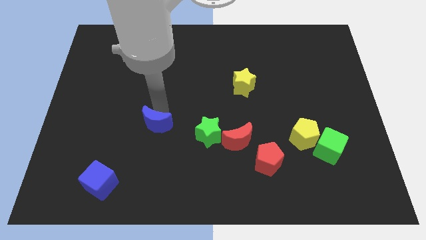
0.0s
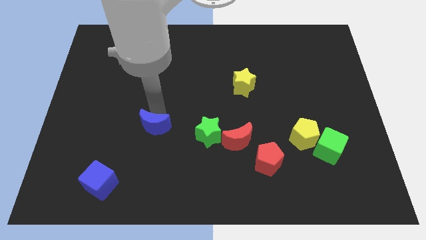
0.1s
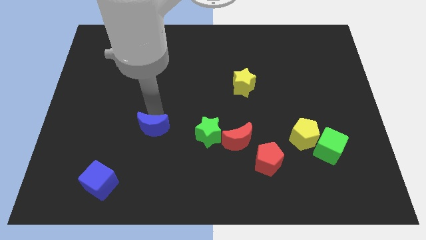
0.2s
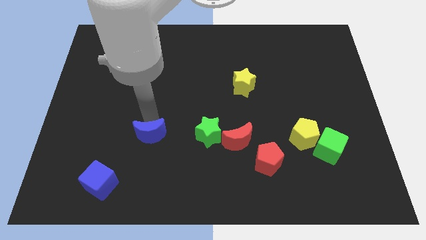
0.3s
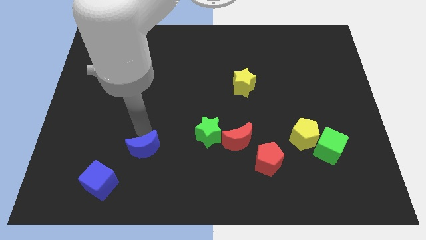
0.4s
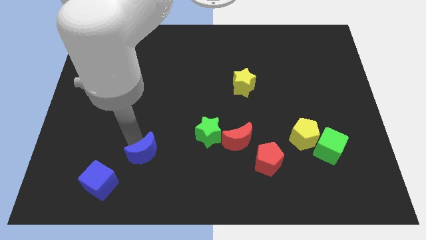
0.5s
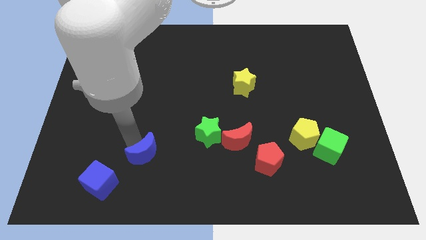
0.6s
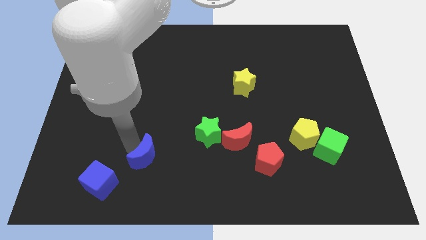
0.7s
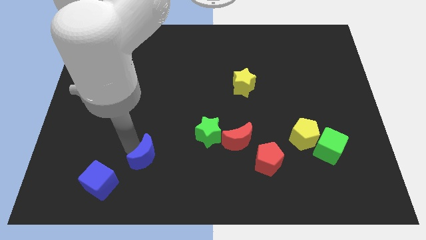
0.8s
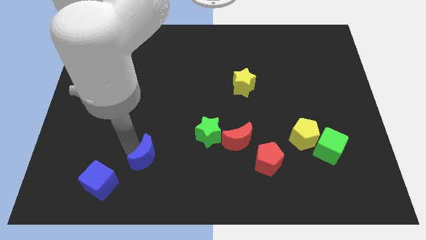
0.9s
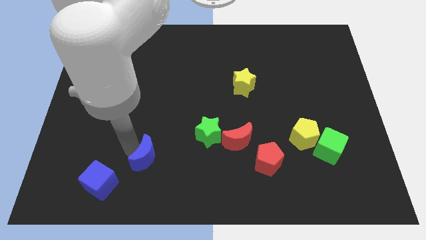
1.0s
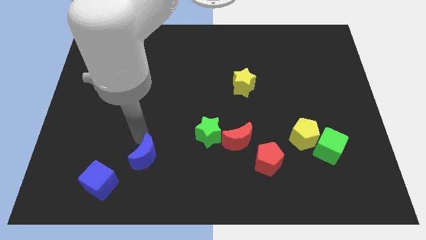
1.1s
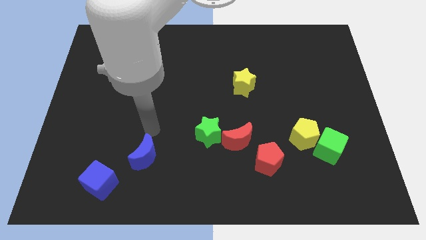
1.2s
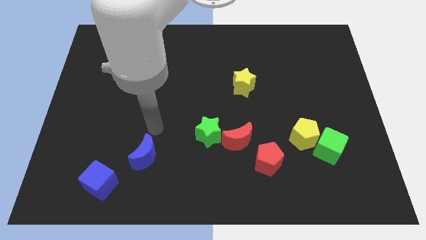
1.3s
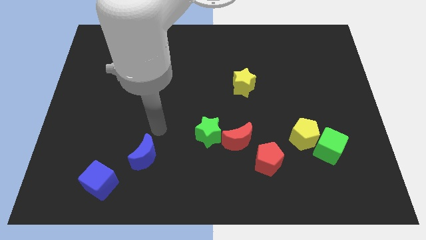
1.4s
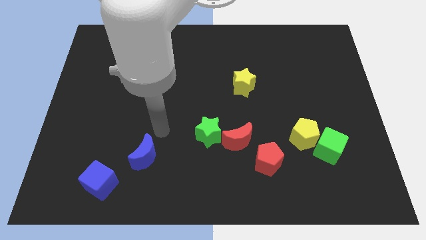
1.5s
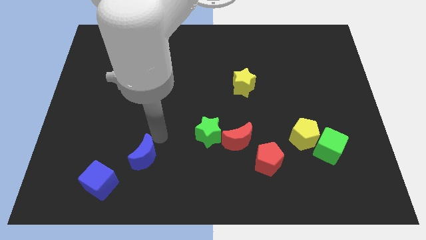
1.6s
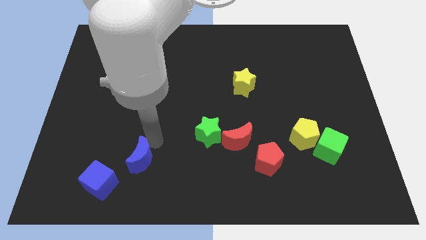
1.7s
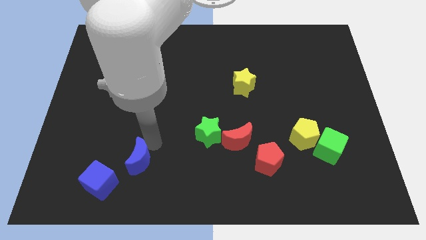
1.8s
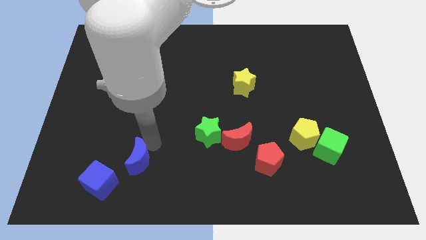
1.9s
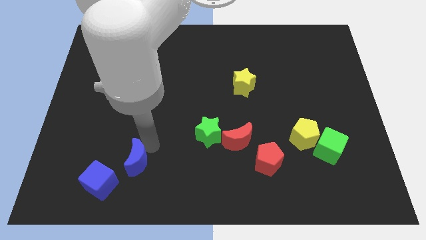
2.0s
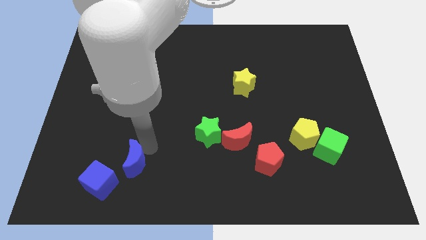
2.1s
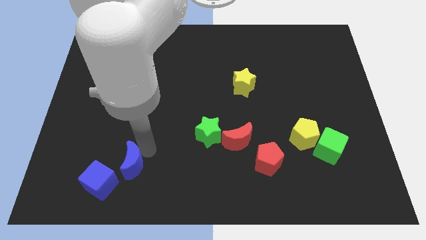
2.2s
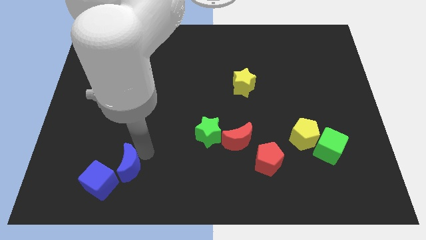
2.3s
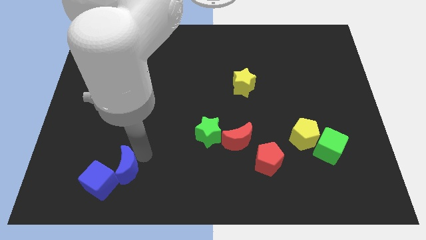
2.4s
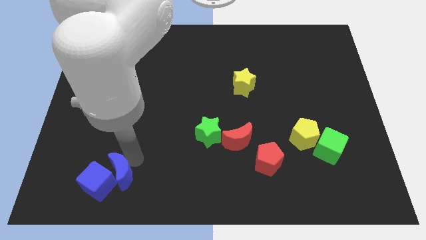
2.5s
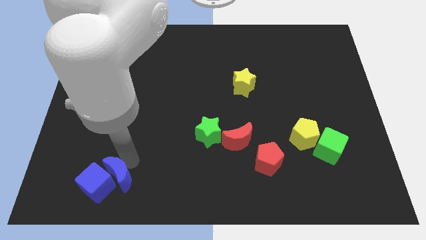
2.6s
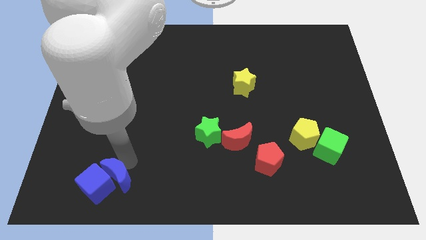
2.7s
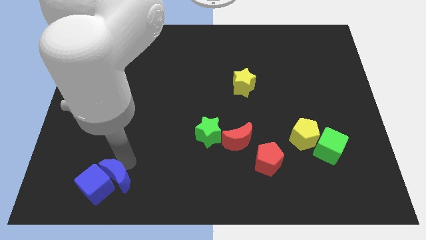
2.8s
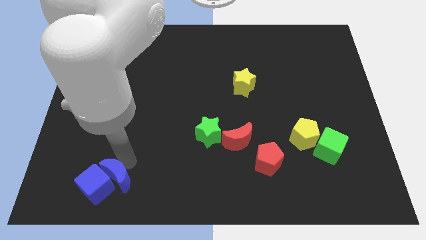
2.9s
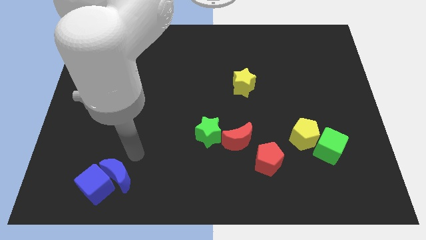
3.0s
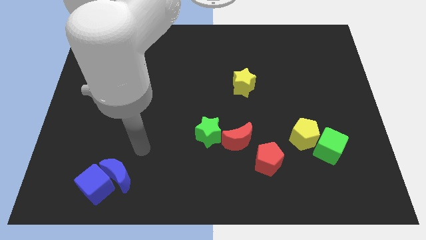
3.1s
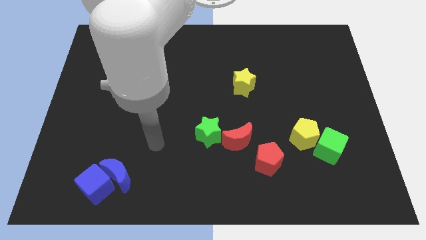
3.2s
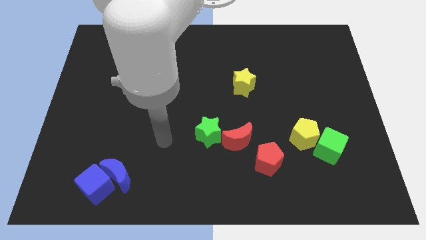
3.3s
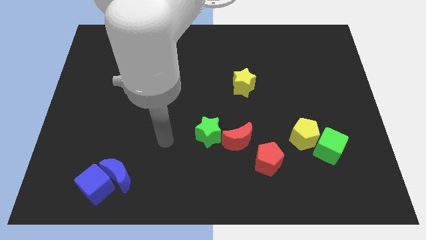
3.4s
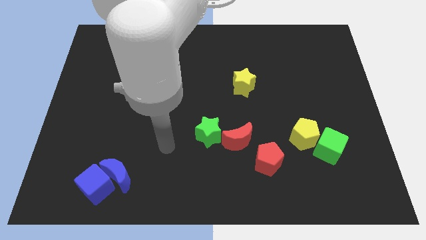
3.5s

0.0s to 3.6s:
push the blue crescent into the top side of the blue cube

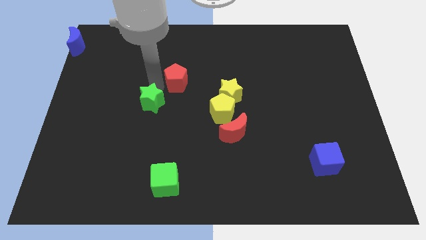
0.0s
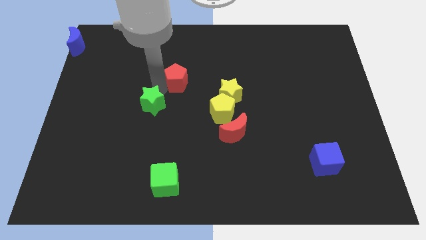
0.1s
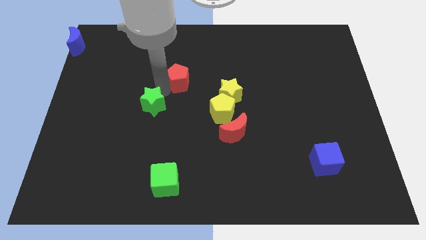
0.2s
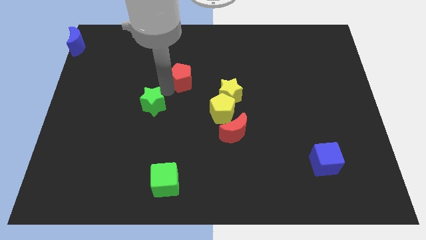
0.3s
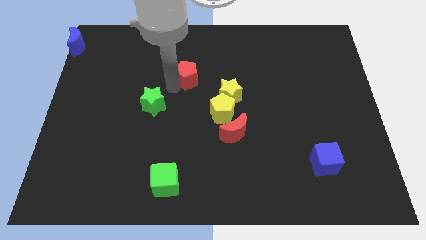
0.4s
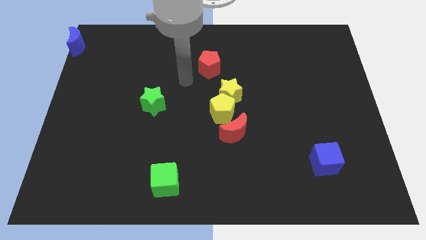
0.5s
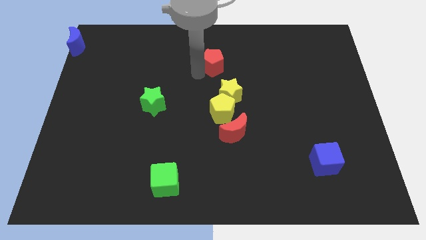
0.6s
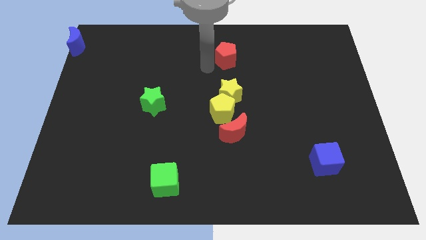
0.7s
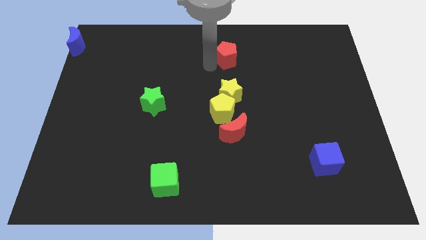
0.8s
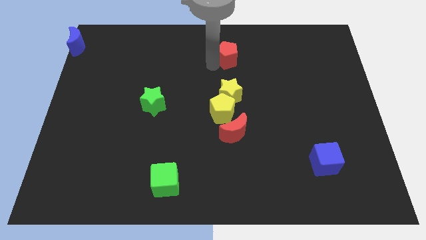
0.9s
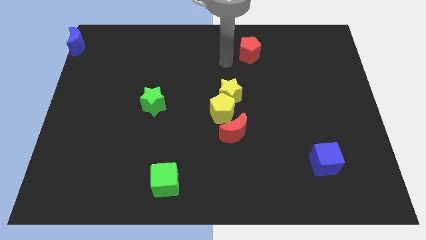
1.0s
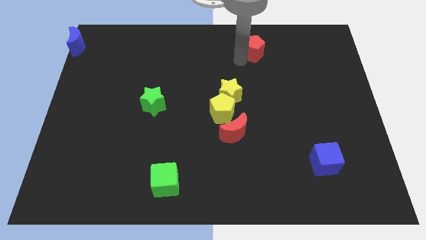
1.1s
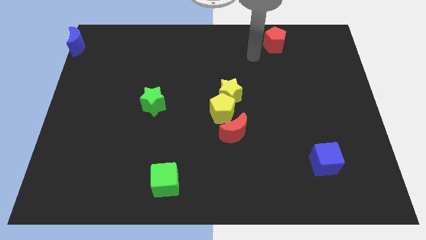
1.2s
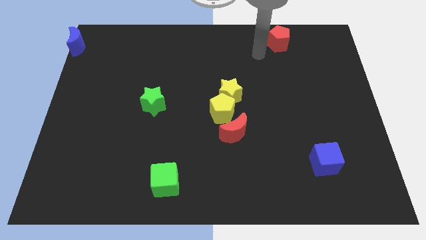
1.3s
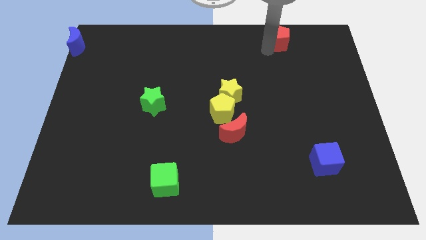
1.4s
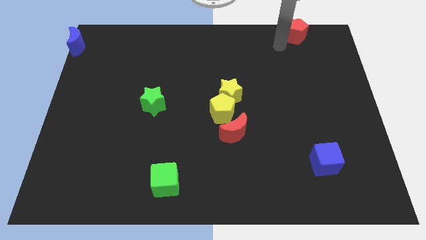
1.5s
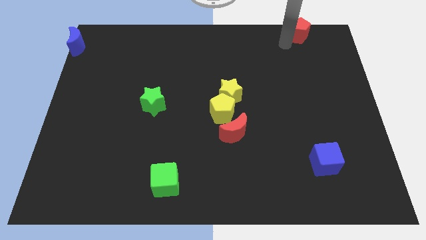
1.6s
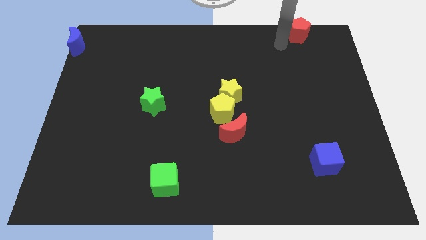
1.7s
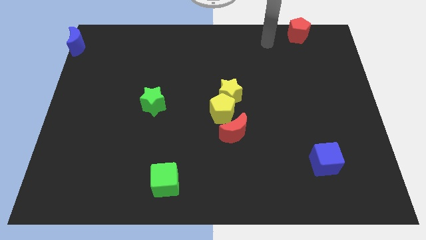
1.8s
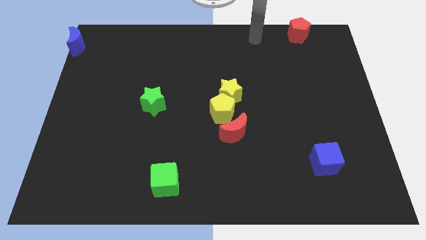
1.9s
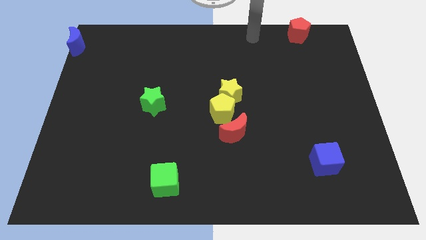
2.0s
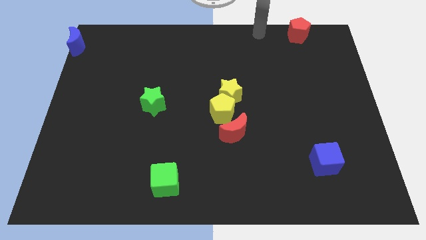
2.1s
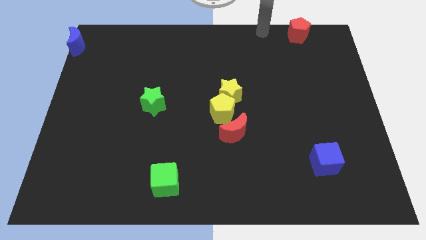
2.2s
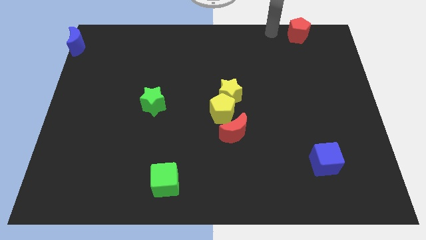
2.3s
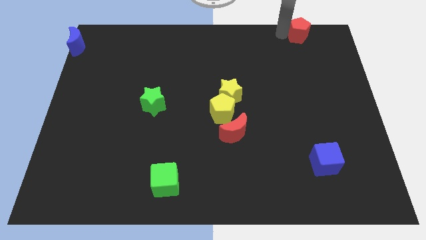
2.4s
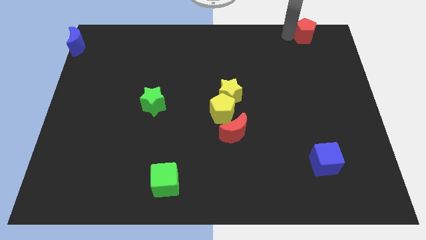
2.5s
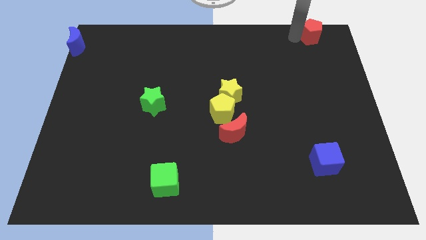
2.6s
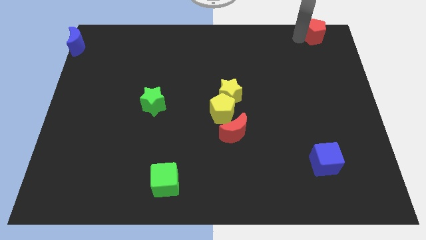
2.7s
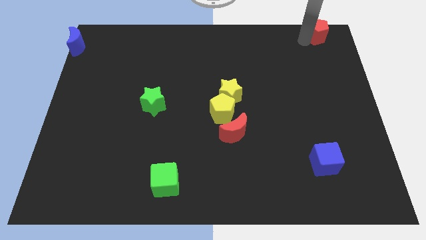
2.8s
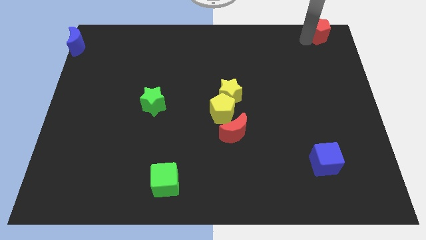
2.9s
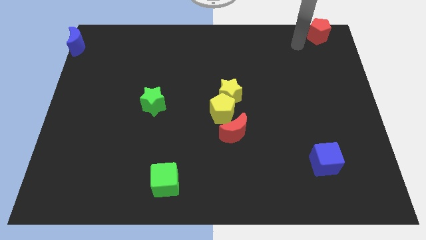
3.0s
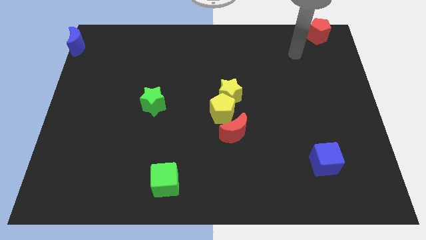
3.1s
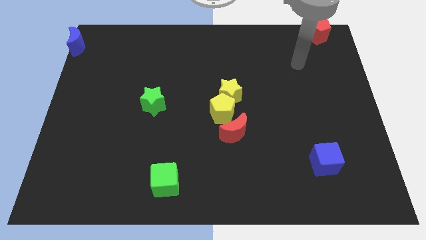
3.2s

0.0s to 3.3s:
slide the red pentagon towards the top right corner of the board

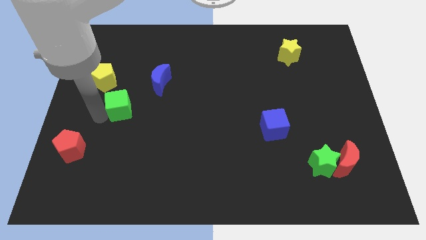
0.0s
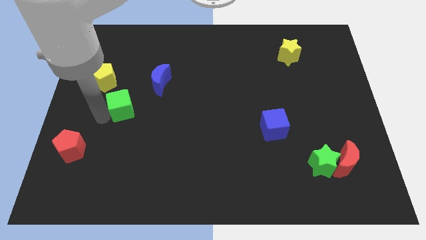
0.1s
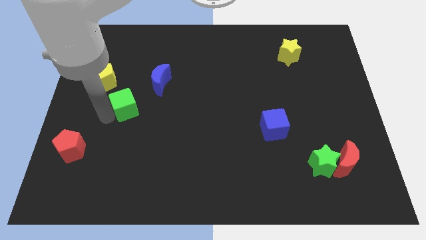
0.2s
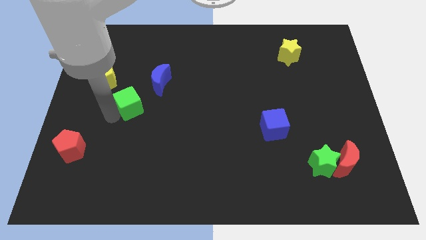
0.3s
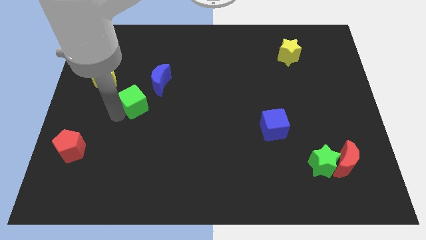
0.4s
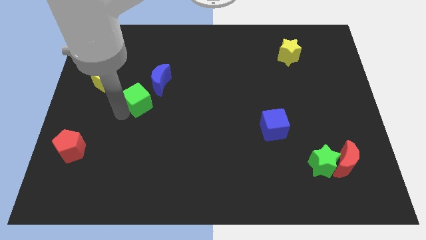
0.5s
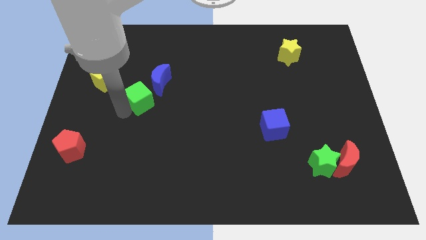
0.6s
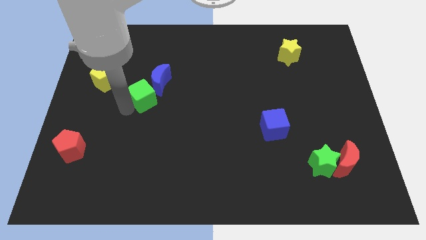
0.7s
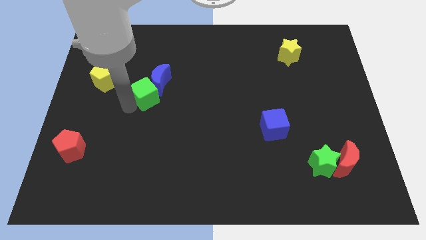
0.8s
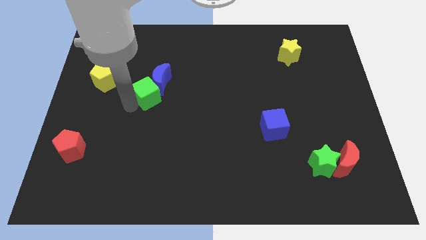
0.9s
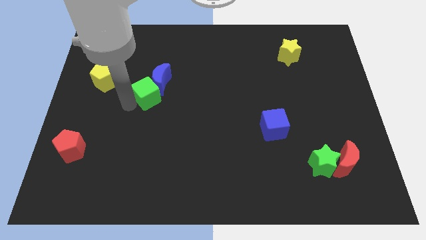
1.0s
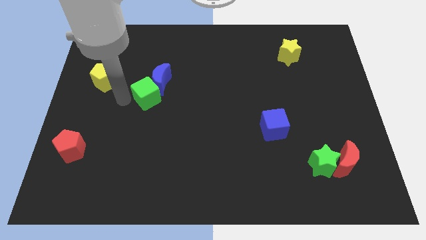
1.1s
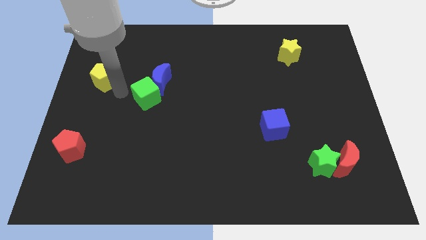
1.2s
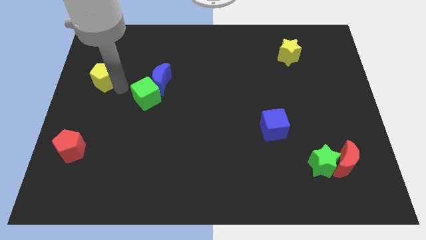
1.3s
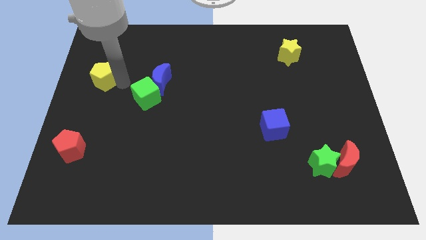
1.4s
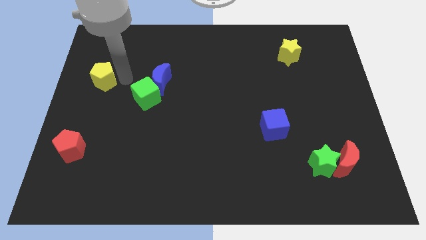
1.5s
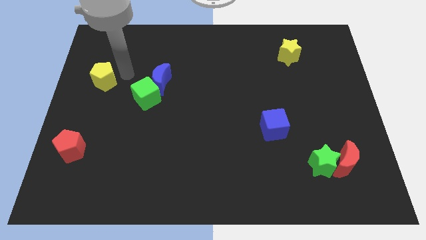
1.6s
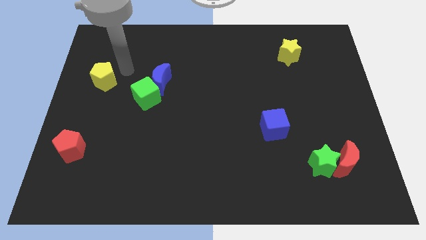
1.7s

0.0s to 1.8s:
place green cube to the bottom left of the blue moon

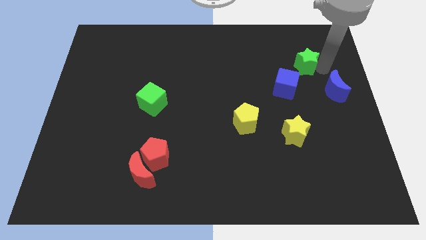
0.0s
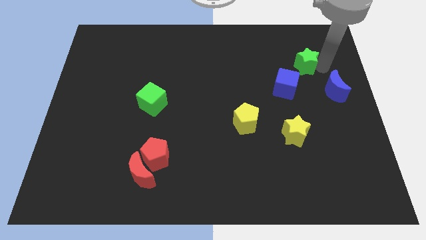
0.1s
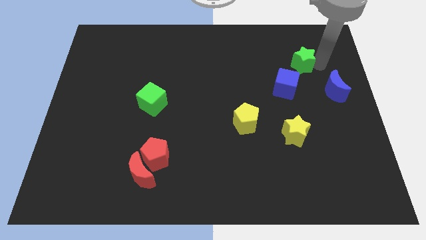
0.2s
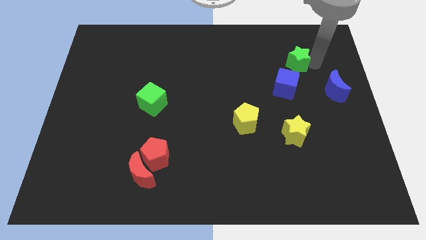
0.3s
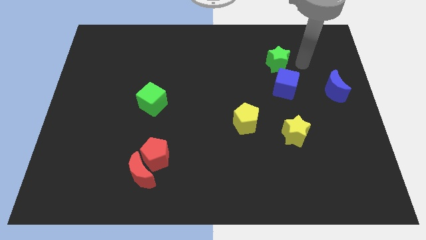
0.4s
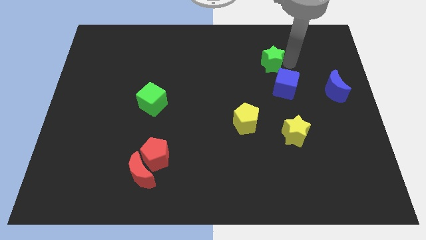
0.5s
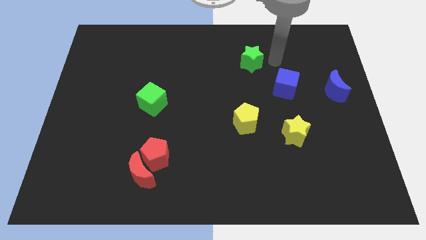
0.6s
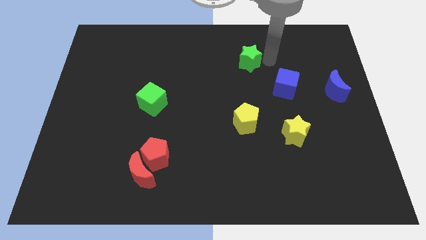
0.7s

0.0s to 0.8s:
slightly move the green star towards the top center
